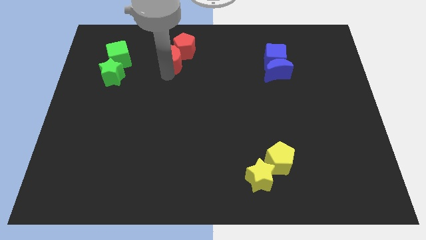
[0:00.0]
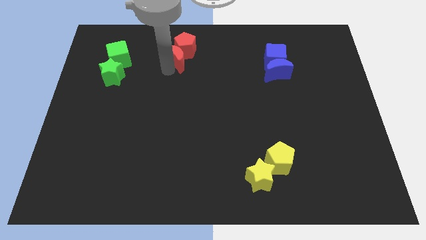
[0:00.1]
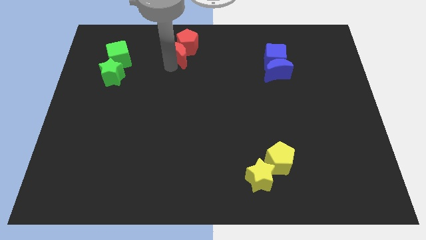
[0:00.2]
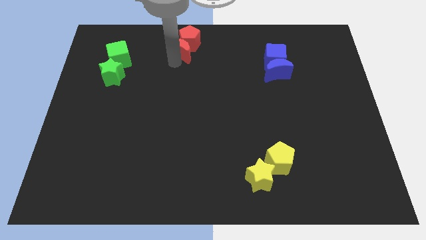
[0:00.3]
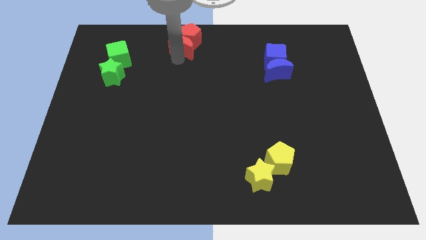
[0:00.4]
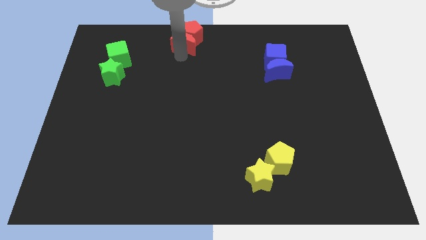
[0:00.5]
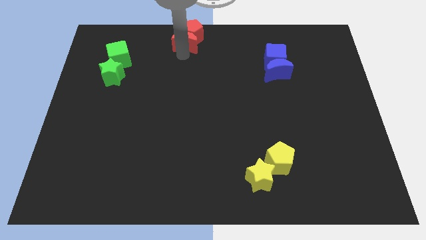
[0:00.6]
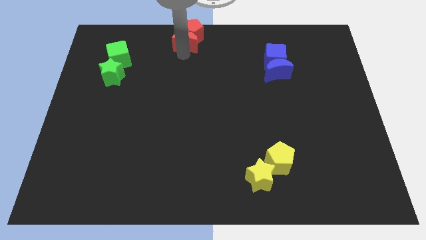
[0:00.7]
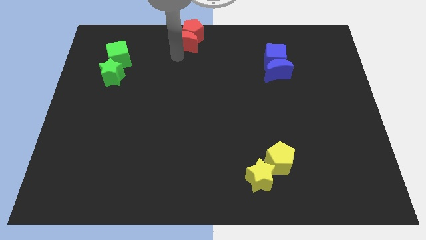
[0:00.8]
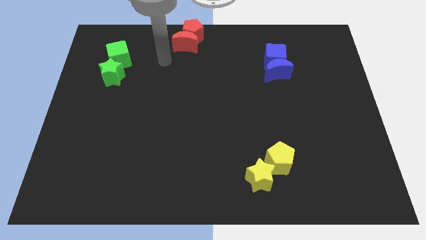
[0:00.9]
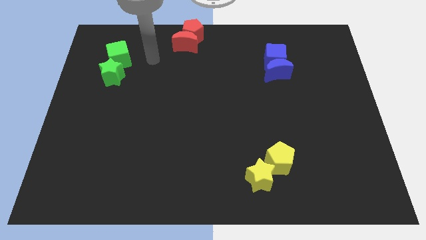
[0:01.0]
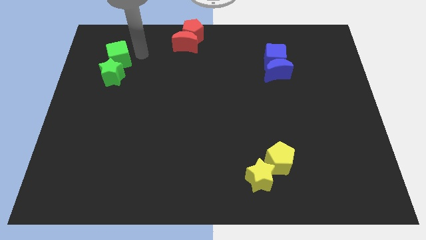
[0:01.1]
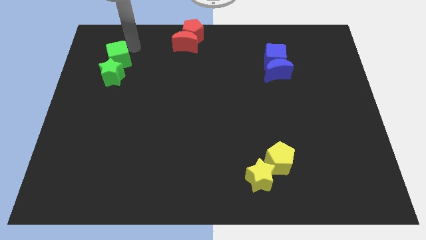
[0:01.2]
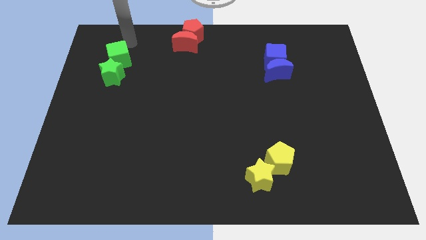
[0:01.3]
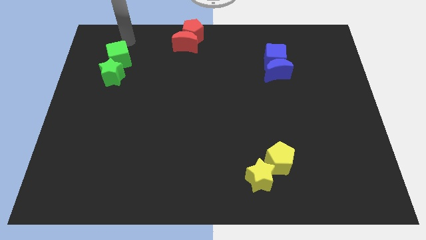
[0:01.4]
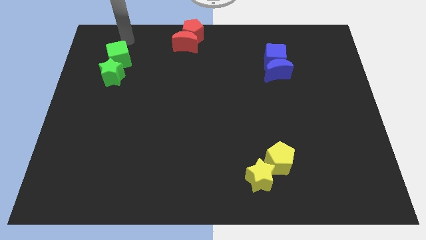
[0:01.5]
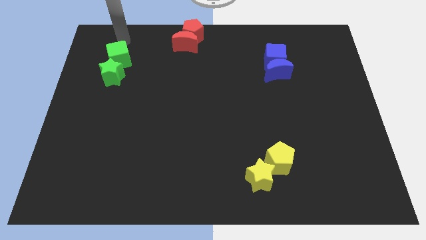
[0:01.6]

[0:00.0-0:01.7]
place the red pentagon and red crescent at the top center

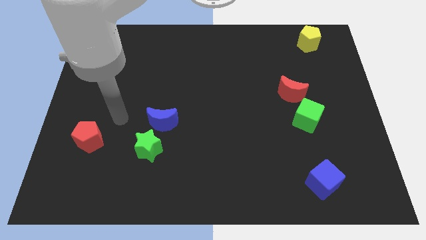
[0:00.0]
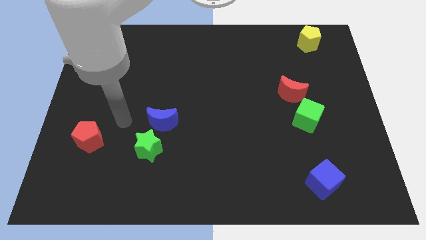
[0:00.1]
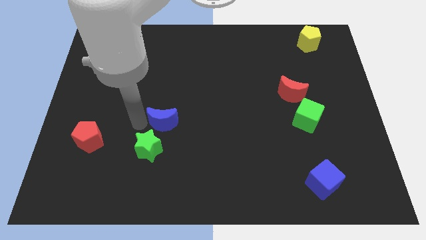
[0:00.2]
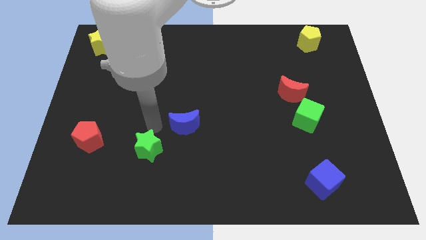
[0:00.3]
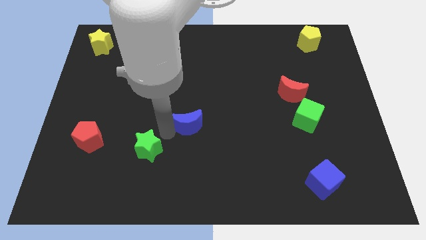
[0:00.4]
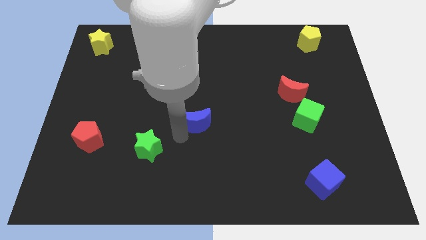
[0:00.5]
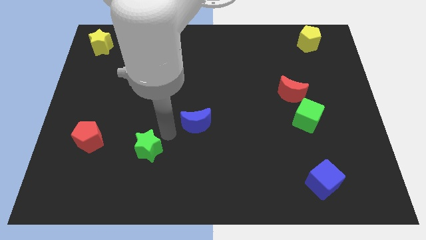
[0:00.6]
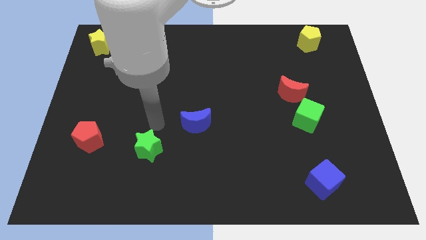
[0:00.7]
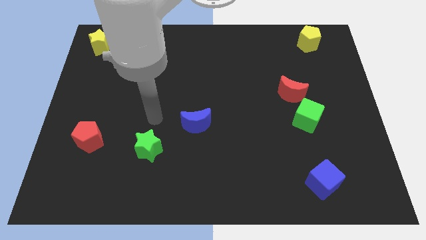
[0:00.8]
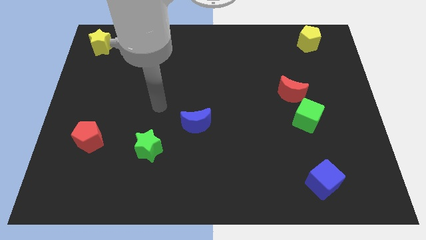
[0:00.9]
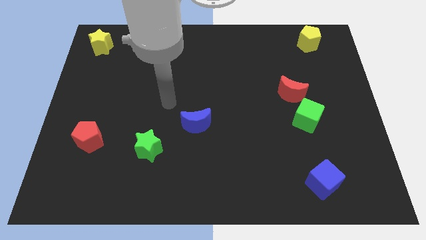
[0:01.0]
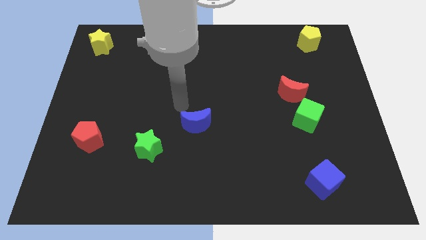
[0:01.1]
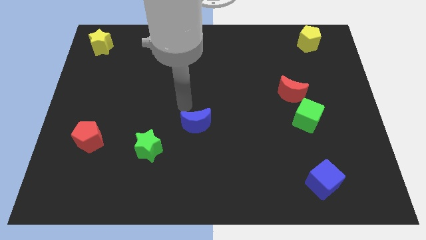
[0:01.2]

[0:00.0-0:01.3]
move the blue crescent away from the top side of the green star

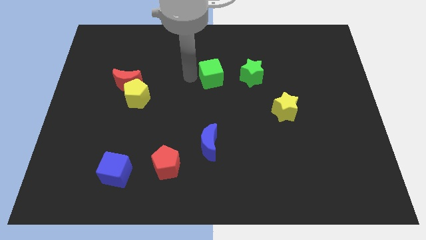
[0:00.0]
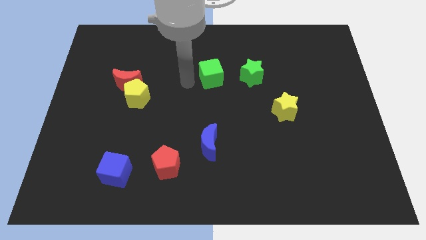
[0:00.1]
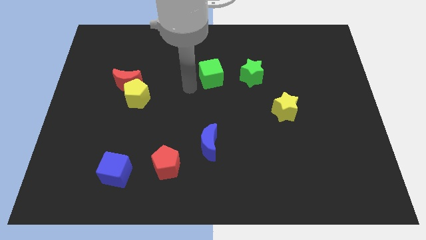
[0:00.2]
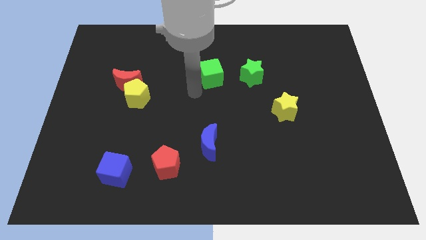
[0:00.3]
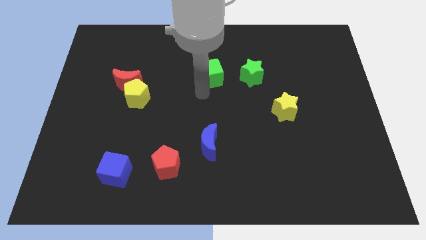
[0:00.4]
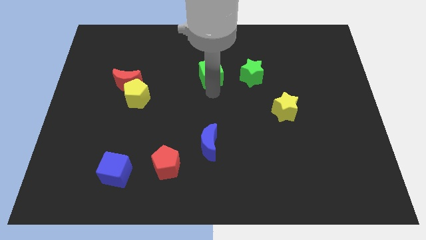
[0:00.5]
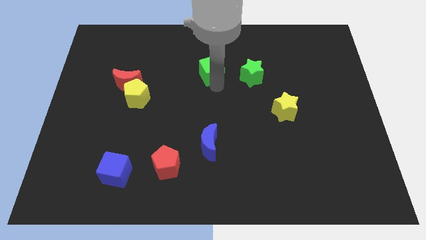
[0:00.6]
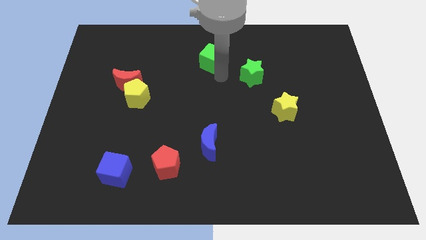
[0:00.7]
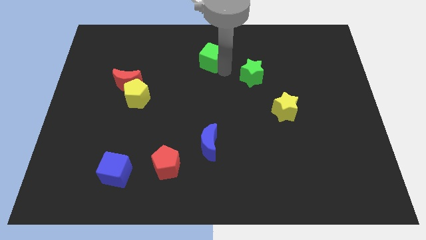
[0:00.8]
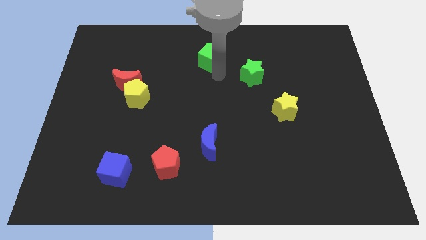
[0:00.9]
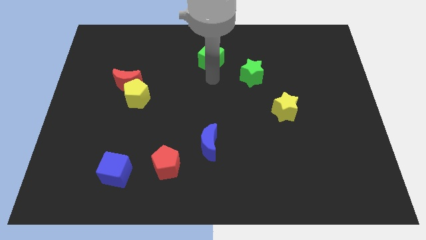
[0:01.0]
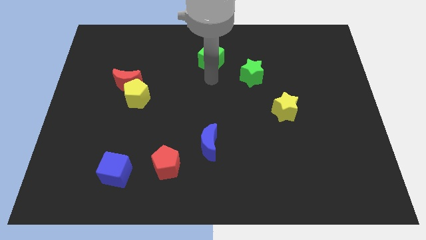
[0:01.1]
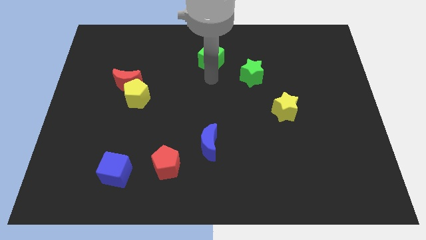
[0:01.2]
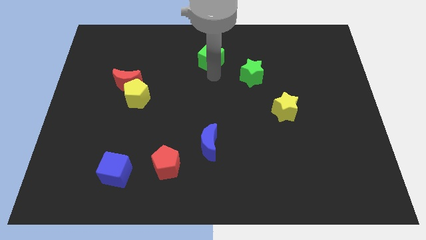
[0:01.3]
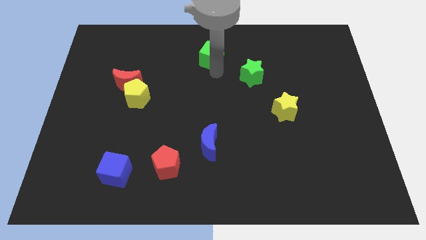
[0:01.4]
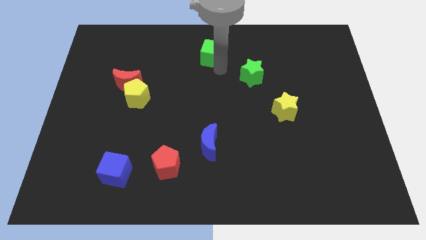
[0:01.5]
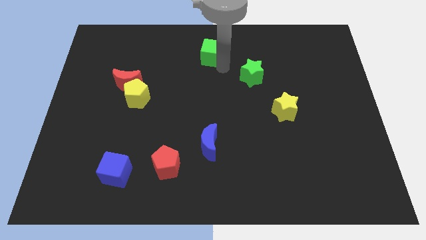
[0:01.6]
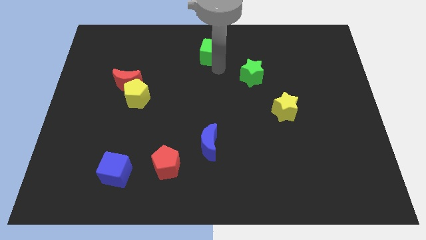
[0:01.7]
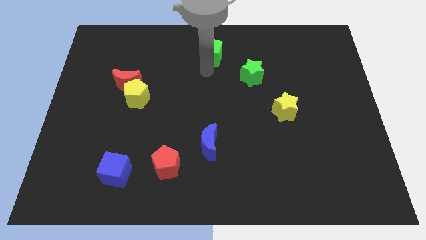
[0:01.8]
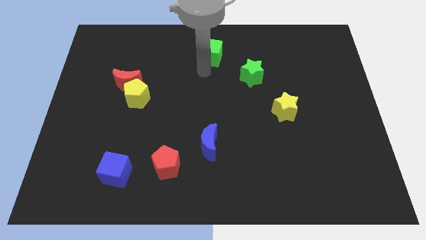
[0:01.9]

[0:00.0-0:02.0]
push the green cube towards the top

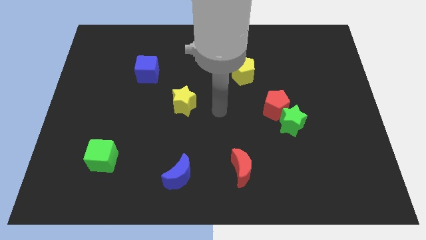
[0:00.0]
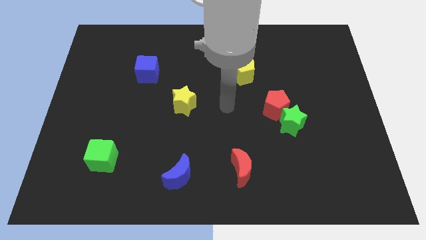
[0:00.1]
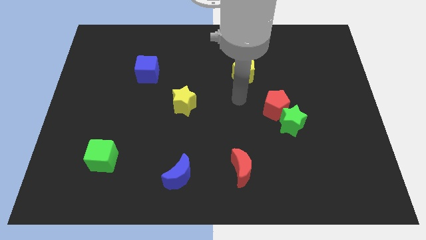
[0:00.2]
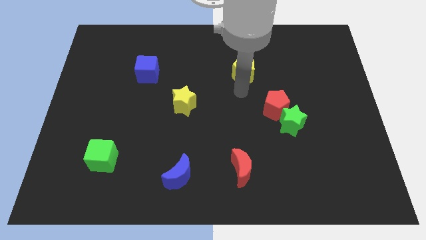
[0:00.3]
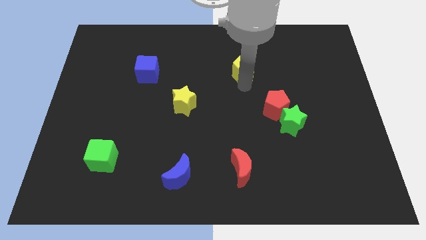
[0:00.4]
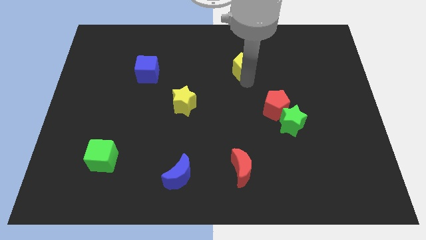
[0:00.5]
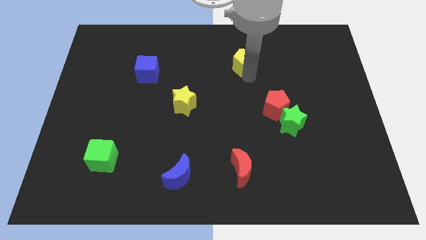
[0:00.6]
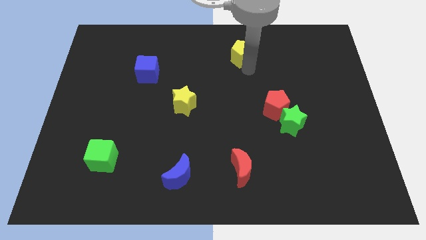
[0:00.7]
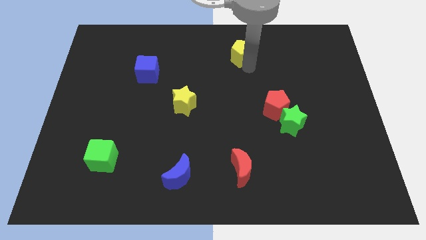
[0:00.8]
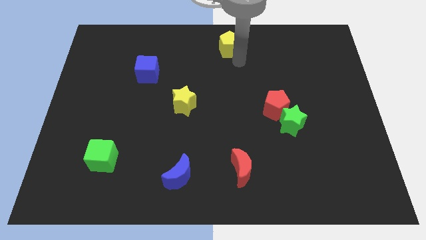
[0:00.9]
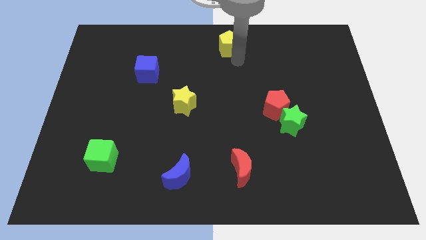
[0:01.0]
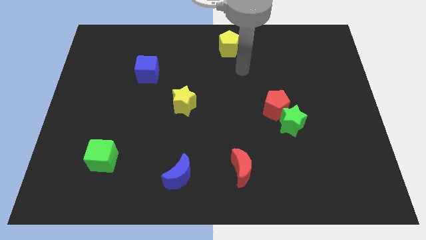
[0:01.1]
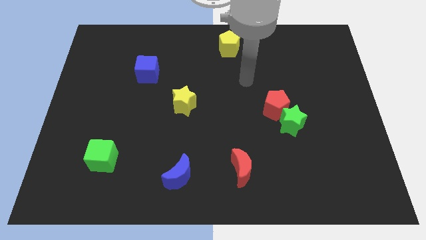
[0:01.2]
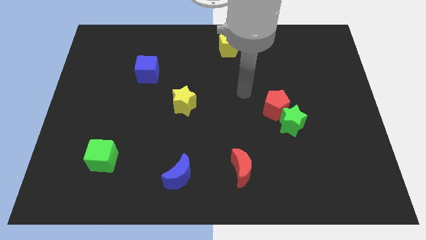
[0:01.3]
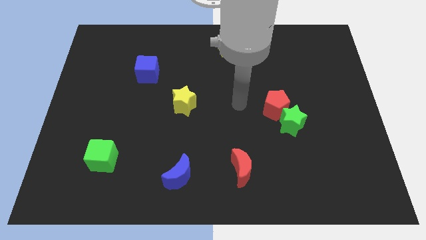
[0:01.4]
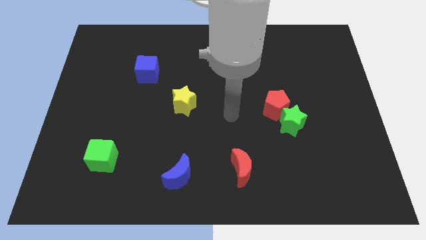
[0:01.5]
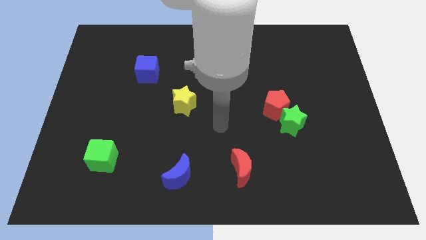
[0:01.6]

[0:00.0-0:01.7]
move the yellow pentagon up slightly

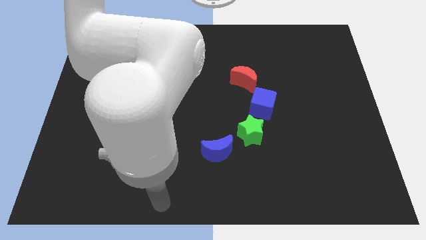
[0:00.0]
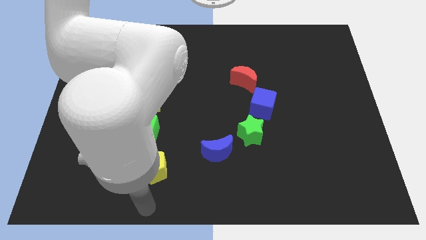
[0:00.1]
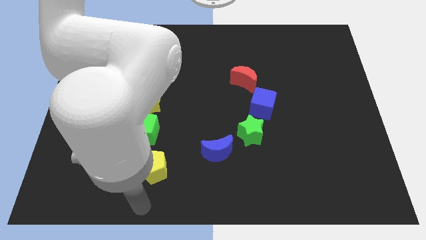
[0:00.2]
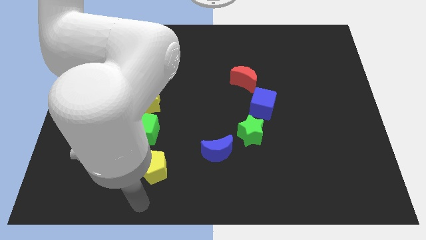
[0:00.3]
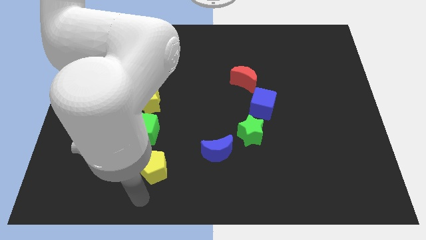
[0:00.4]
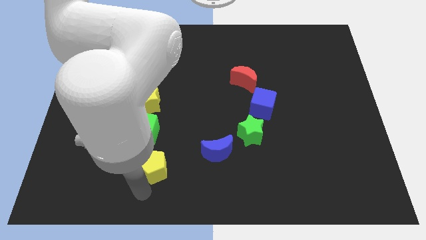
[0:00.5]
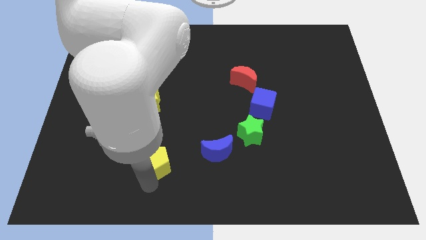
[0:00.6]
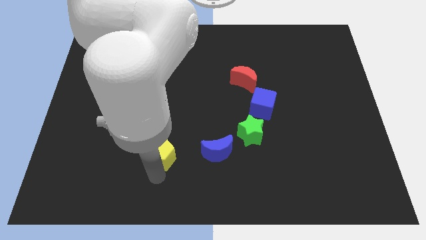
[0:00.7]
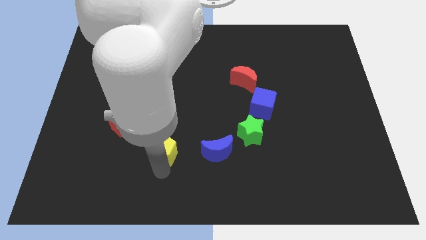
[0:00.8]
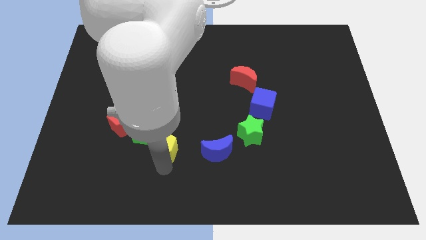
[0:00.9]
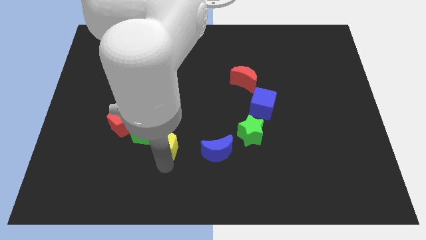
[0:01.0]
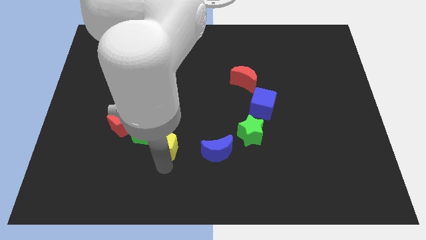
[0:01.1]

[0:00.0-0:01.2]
place yellow pentagon to the left of blue moon

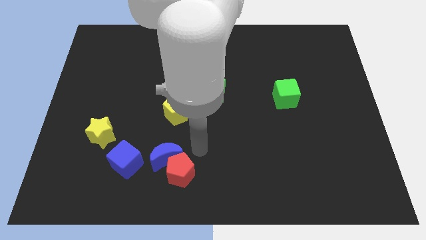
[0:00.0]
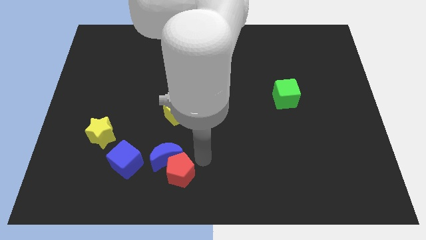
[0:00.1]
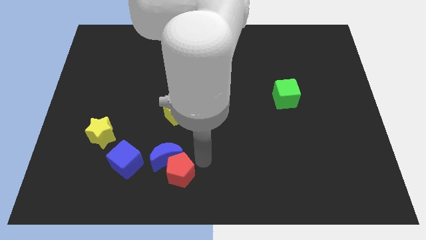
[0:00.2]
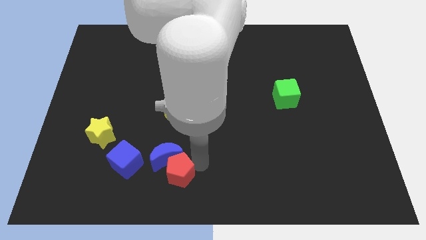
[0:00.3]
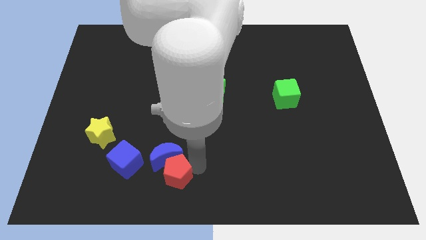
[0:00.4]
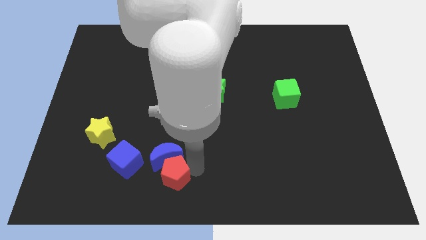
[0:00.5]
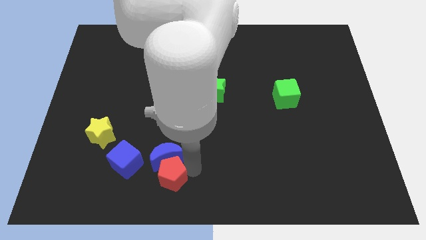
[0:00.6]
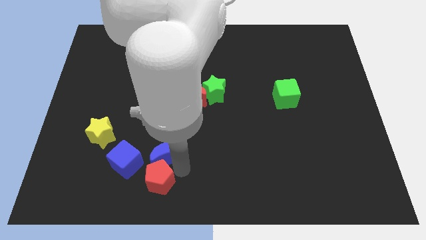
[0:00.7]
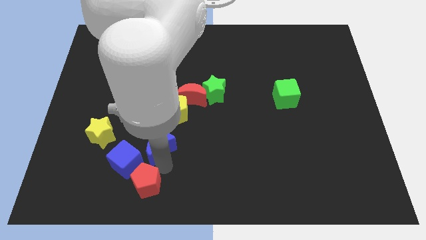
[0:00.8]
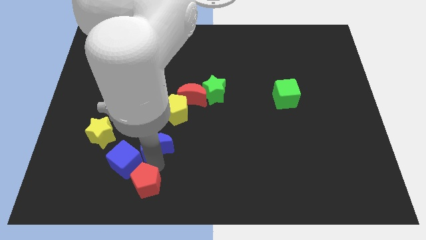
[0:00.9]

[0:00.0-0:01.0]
place the red pentagon at the bottom right side of blue cube
